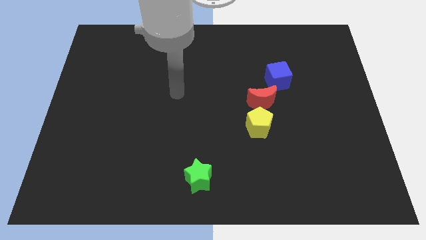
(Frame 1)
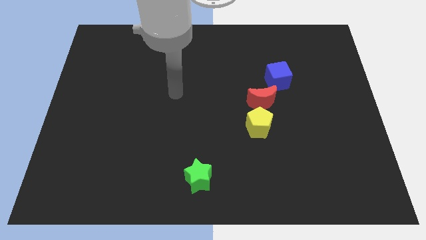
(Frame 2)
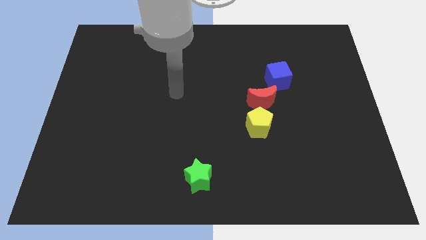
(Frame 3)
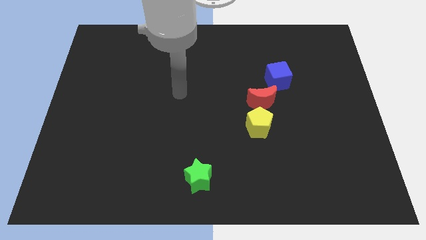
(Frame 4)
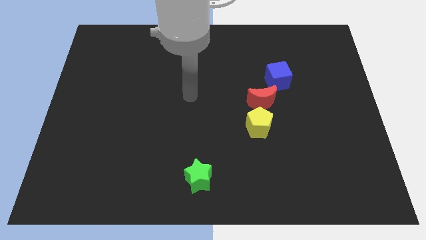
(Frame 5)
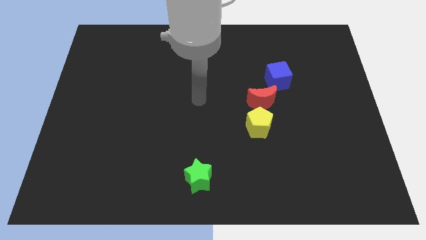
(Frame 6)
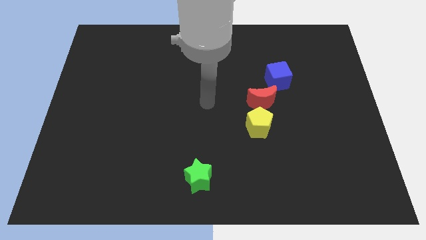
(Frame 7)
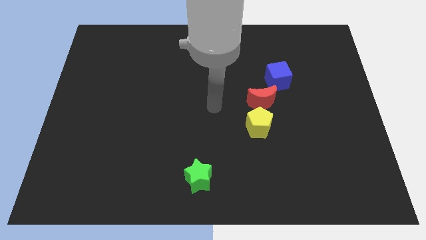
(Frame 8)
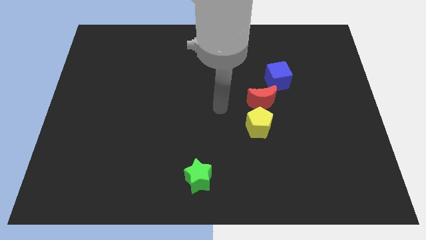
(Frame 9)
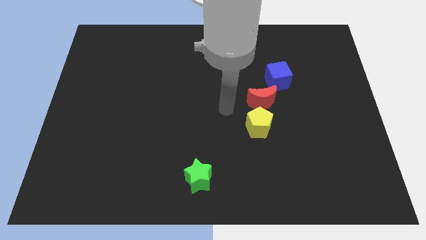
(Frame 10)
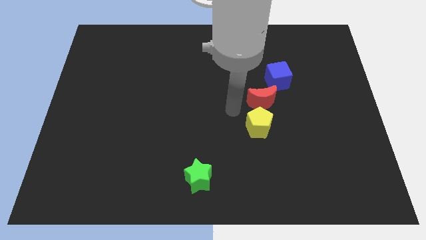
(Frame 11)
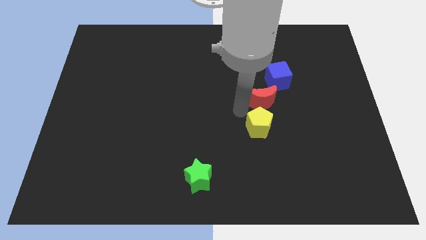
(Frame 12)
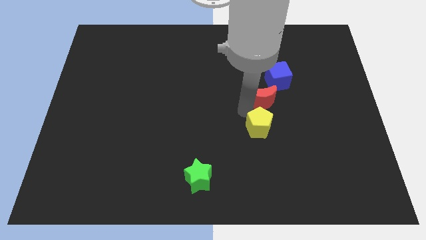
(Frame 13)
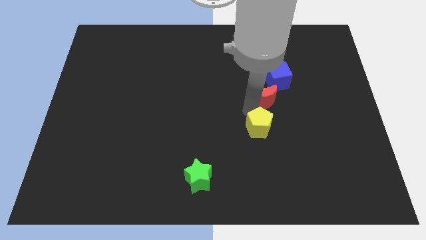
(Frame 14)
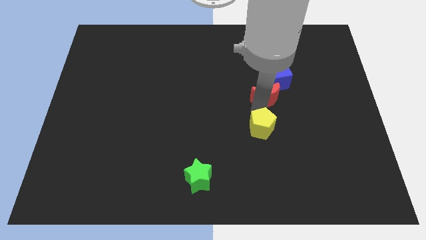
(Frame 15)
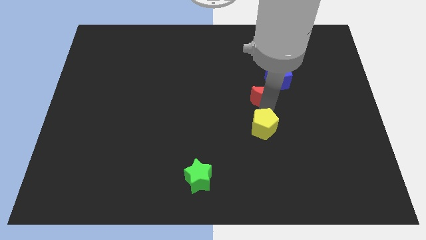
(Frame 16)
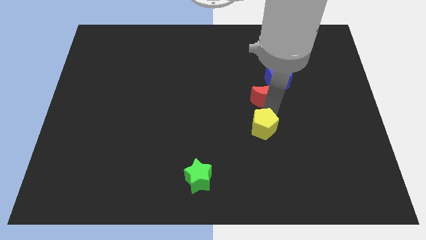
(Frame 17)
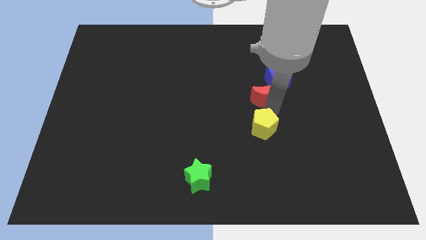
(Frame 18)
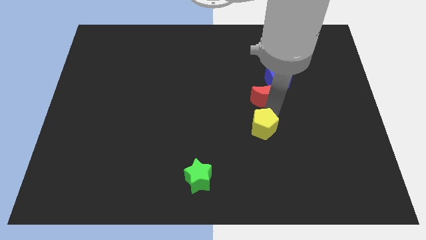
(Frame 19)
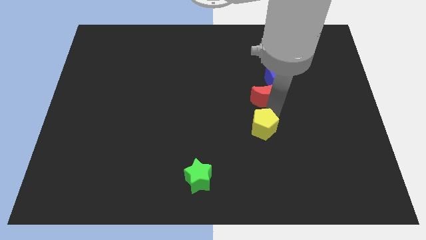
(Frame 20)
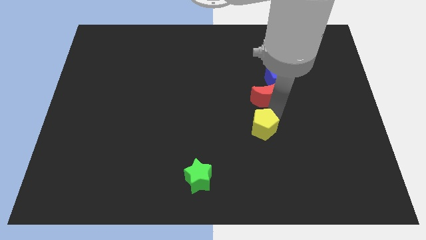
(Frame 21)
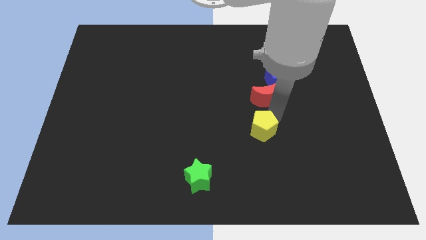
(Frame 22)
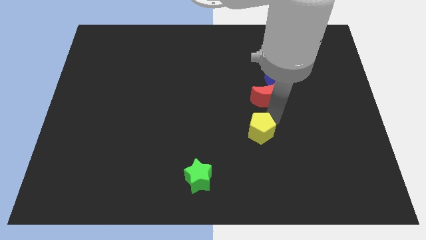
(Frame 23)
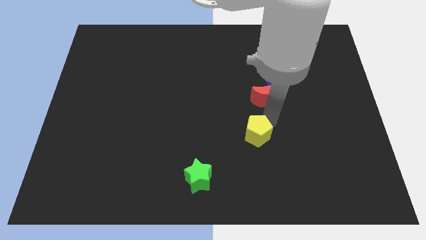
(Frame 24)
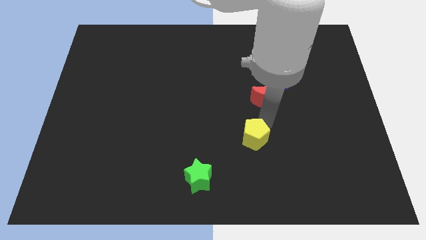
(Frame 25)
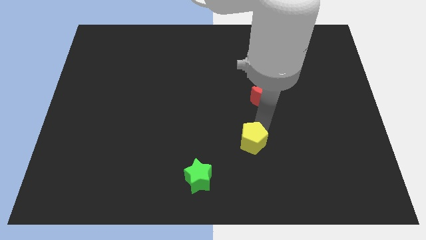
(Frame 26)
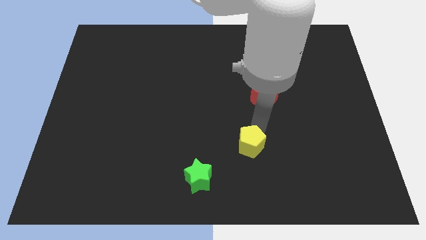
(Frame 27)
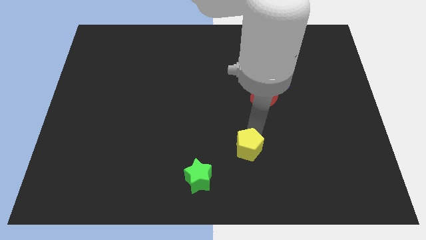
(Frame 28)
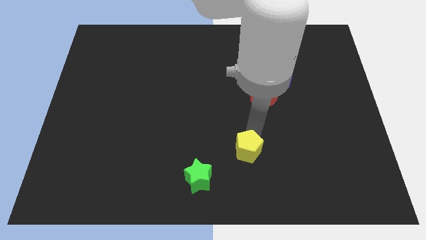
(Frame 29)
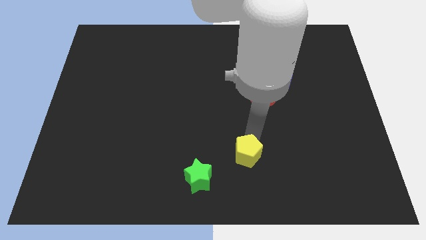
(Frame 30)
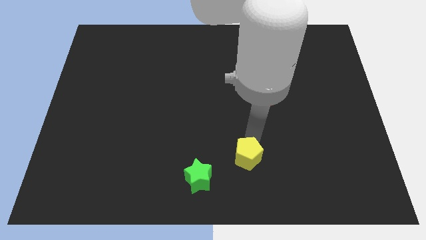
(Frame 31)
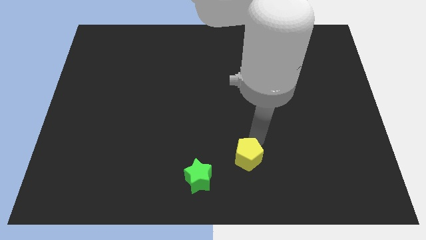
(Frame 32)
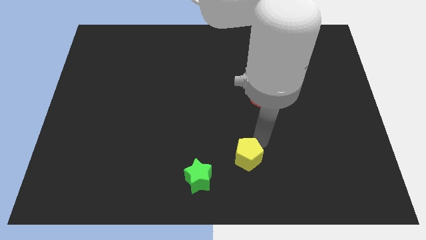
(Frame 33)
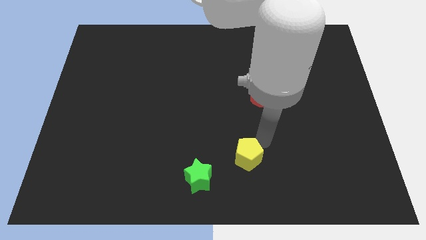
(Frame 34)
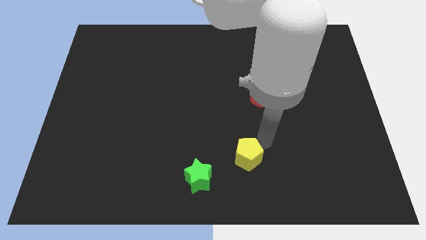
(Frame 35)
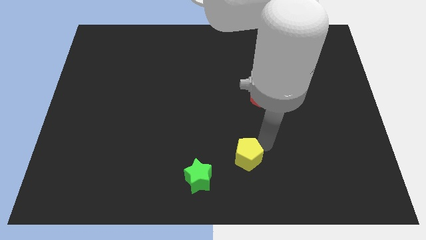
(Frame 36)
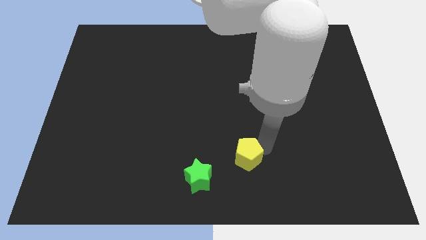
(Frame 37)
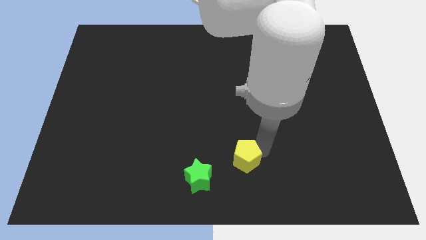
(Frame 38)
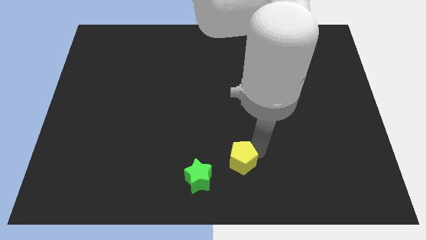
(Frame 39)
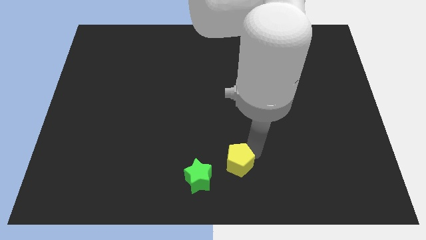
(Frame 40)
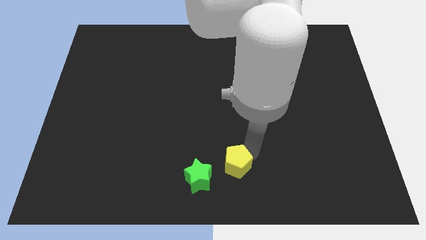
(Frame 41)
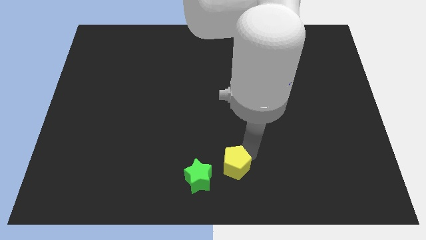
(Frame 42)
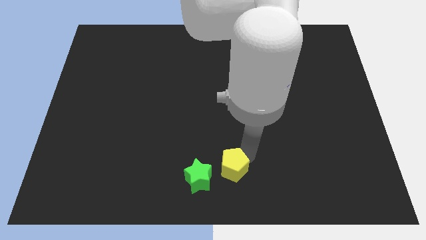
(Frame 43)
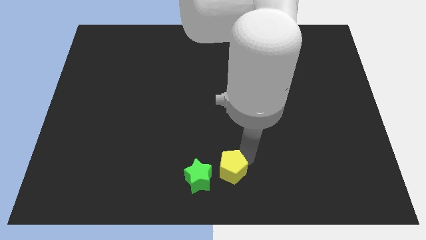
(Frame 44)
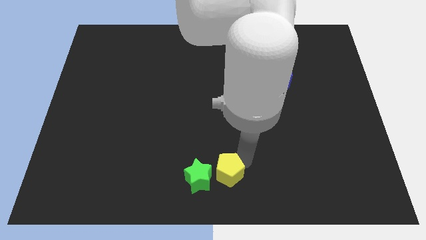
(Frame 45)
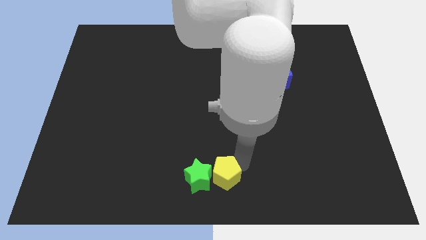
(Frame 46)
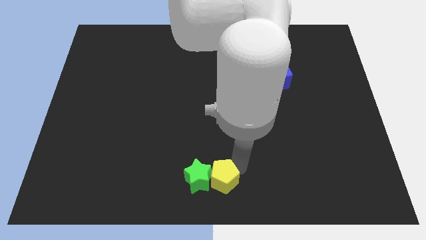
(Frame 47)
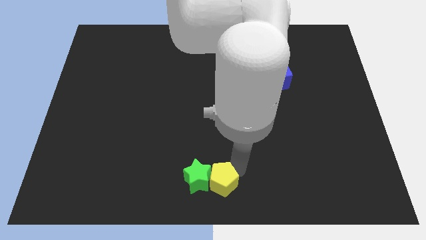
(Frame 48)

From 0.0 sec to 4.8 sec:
slide the yellow block next to the green block

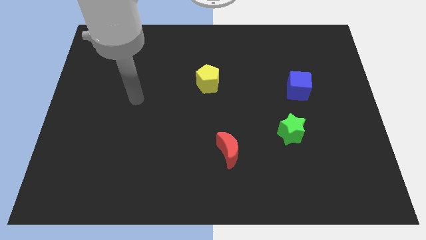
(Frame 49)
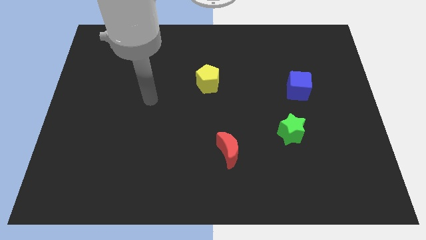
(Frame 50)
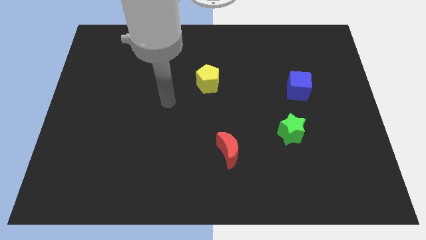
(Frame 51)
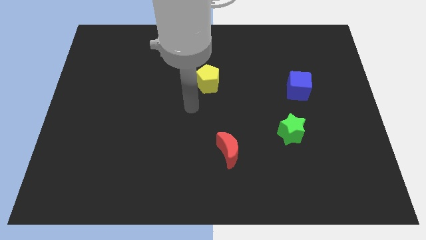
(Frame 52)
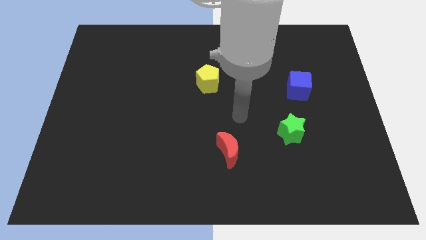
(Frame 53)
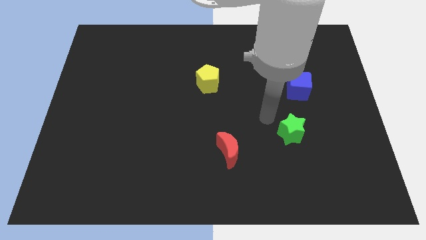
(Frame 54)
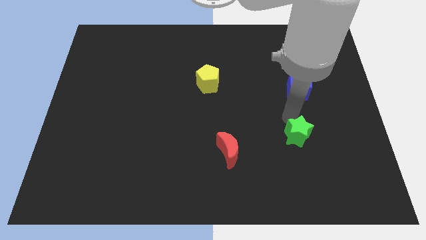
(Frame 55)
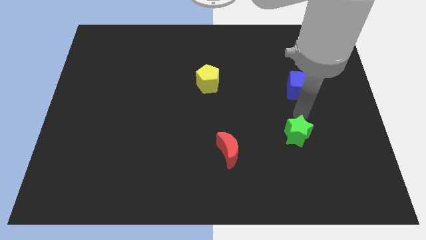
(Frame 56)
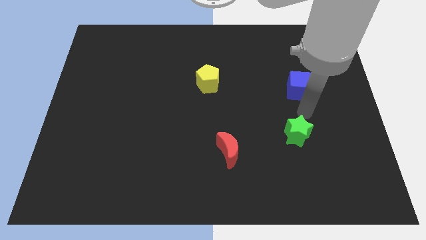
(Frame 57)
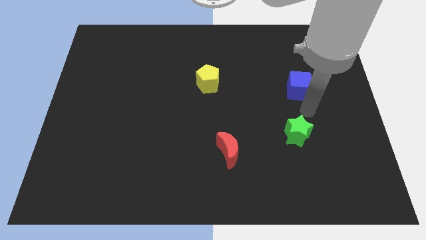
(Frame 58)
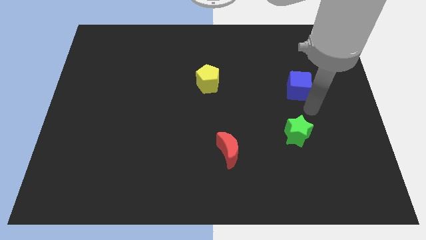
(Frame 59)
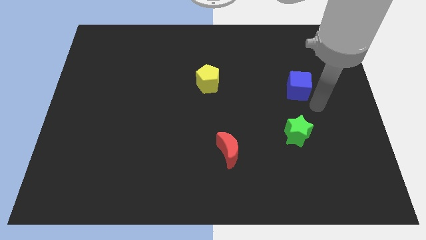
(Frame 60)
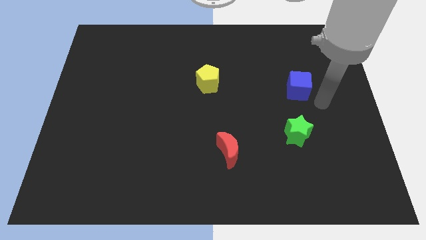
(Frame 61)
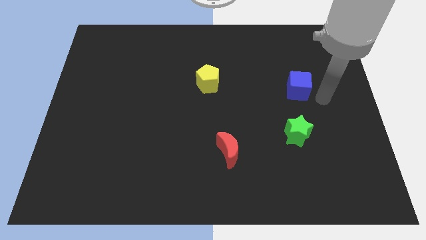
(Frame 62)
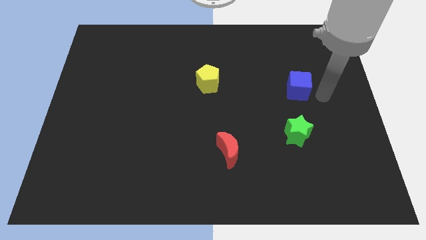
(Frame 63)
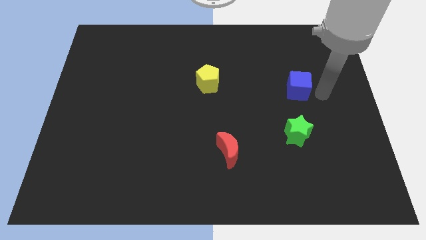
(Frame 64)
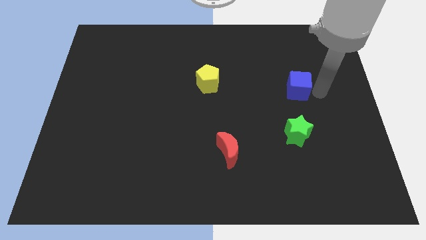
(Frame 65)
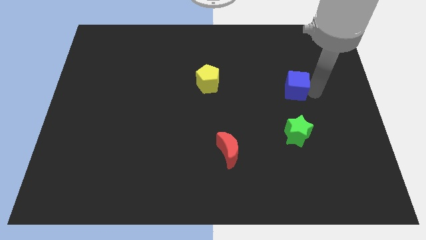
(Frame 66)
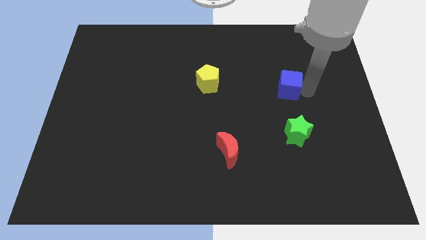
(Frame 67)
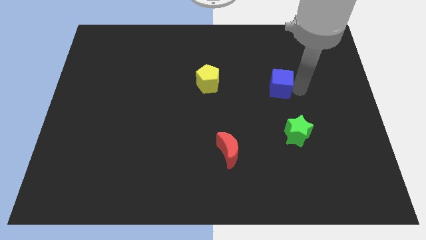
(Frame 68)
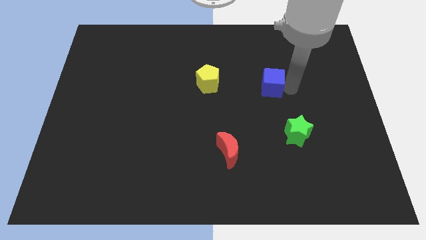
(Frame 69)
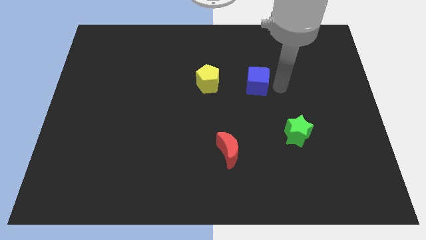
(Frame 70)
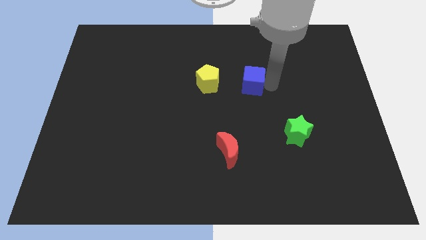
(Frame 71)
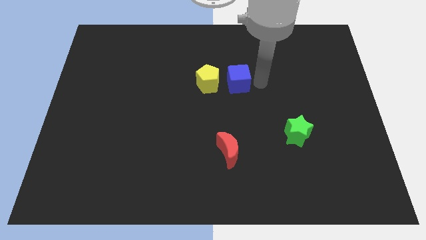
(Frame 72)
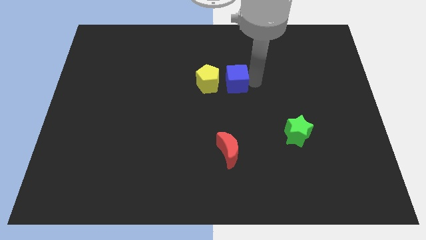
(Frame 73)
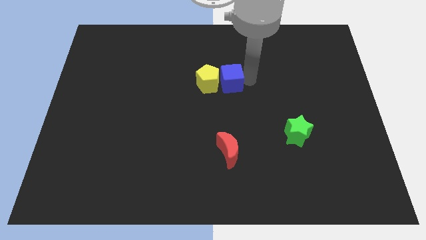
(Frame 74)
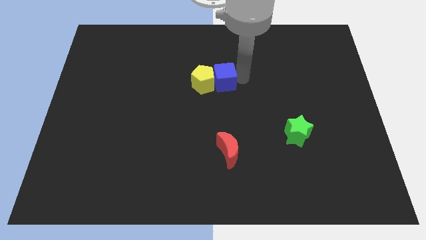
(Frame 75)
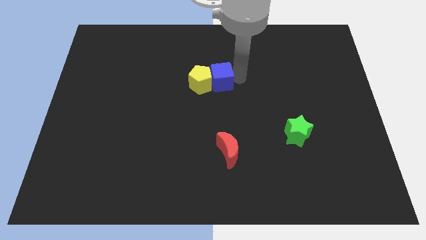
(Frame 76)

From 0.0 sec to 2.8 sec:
put the blue block towards the yellow block

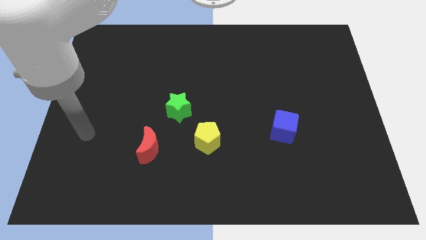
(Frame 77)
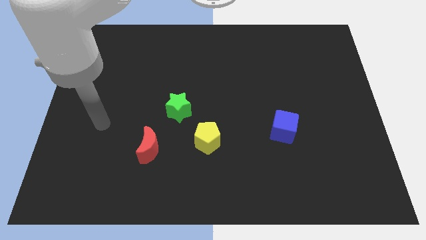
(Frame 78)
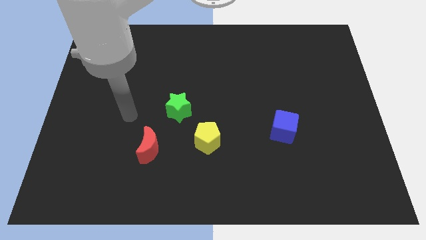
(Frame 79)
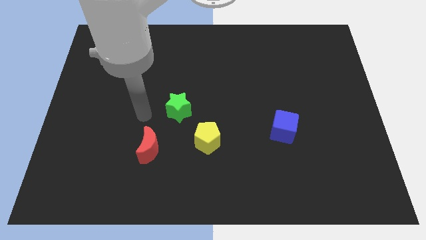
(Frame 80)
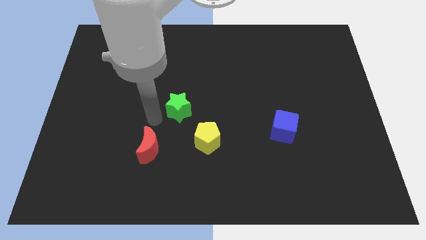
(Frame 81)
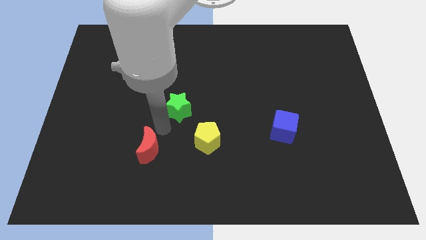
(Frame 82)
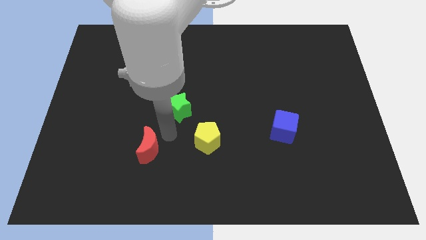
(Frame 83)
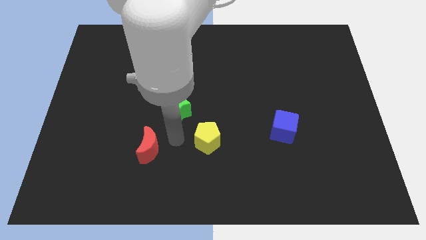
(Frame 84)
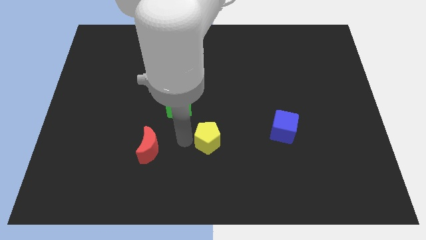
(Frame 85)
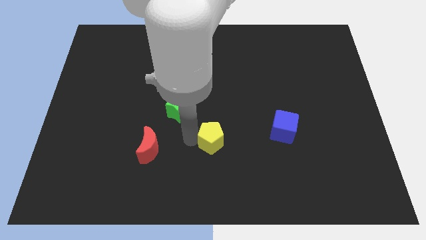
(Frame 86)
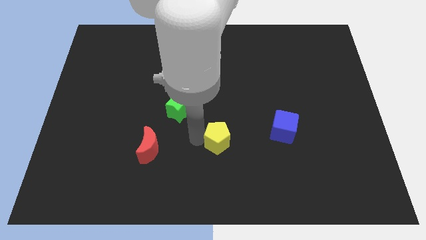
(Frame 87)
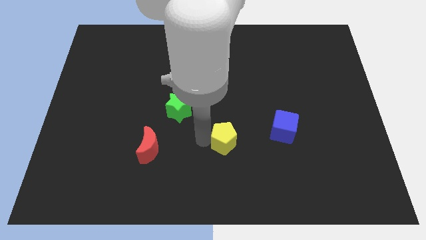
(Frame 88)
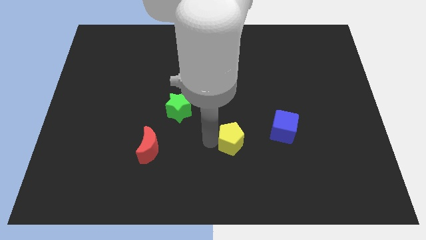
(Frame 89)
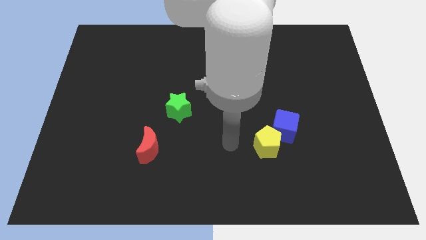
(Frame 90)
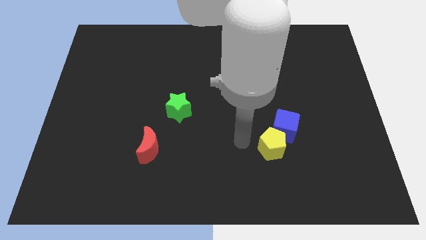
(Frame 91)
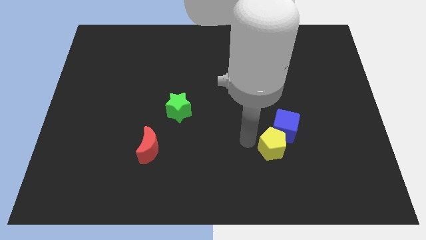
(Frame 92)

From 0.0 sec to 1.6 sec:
put the yellow block to the blue cube
